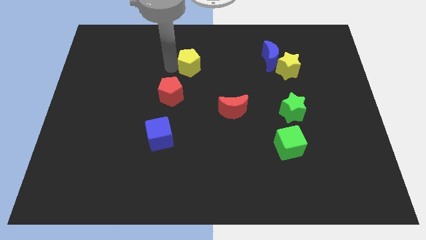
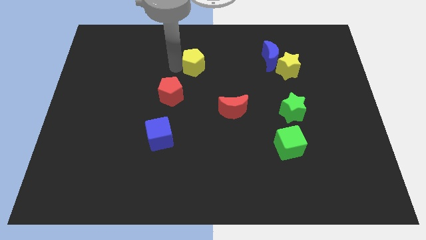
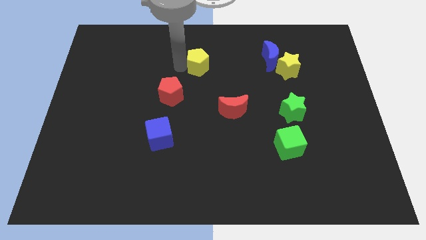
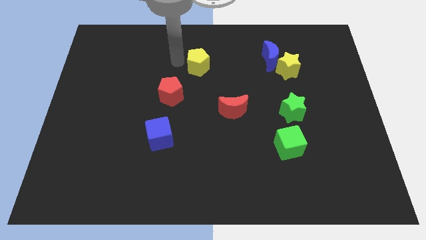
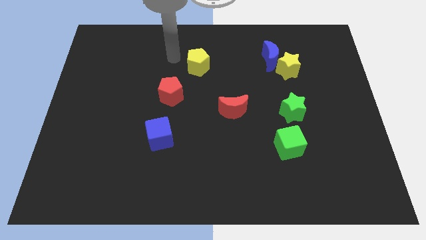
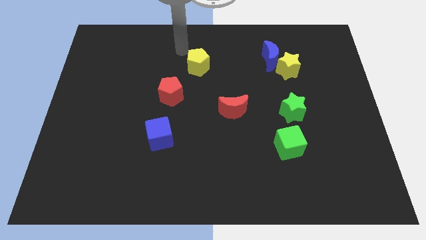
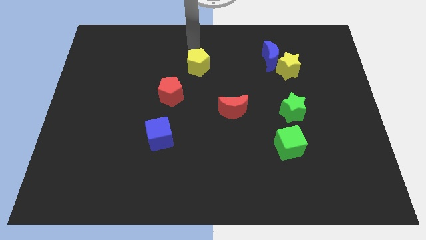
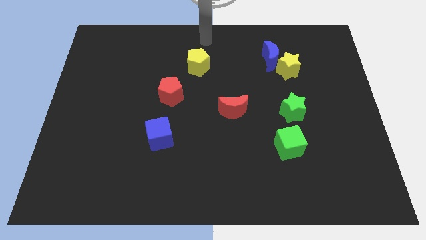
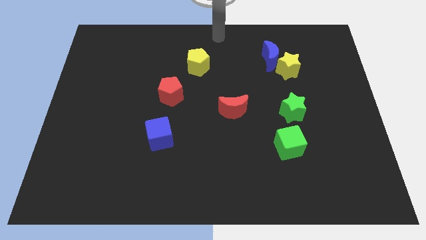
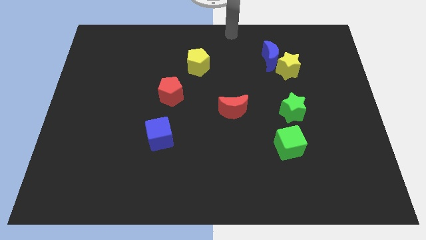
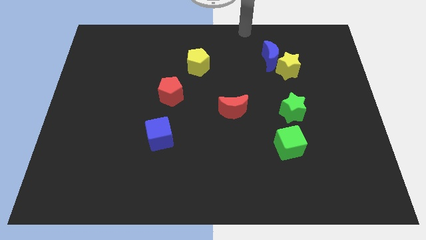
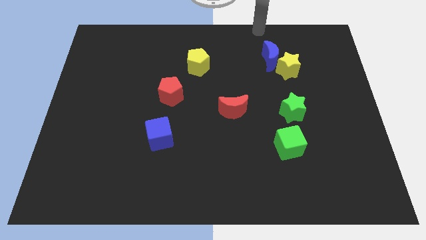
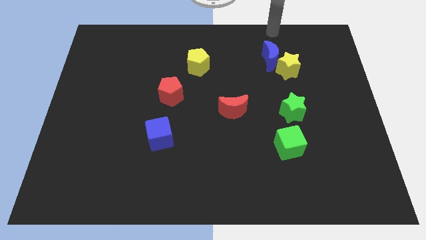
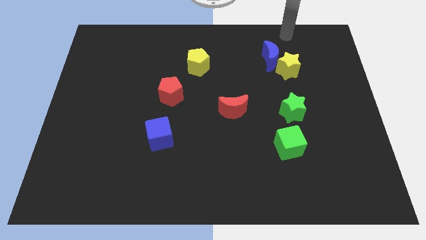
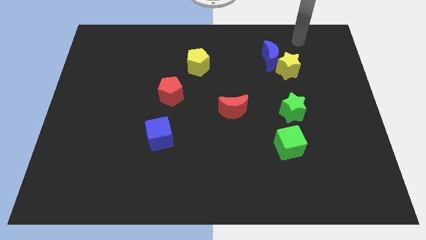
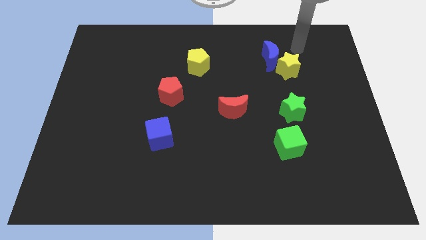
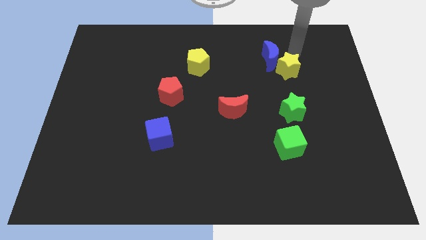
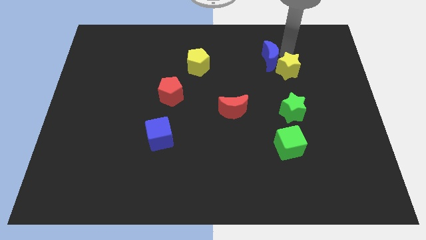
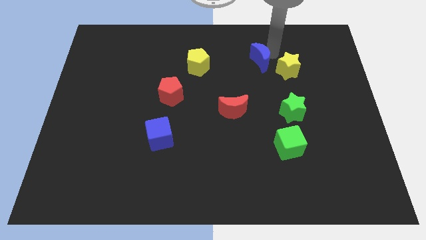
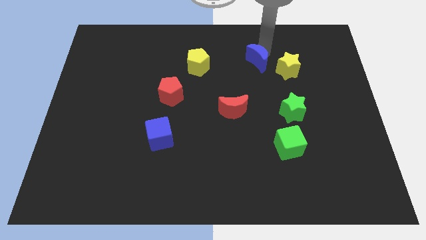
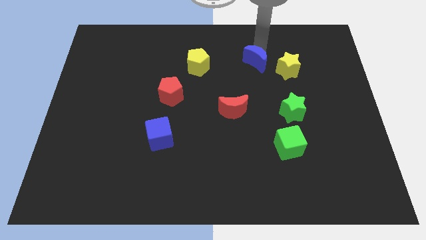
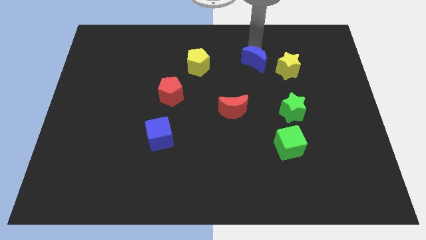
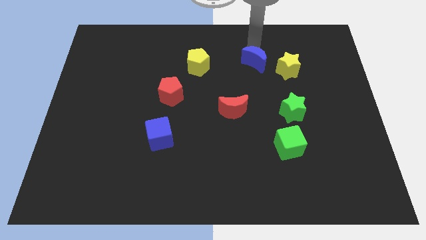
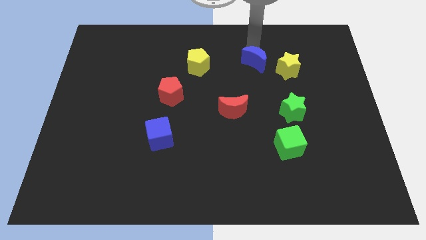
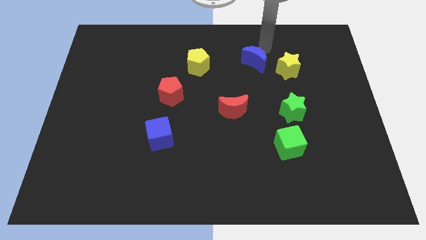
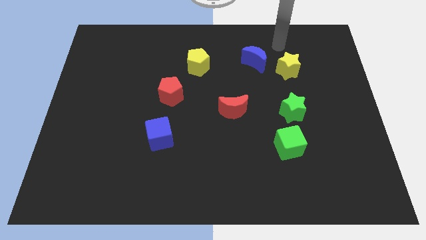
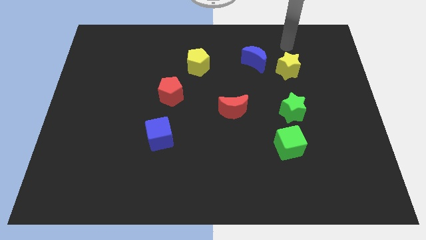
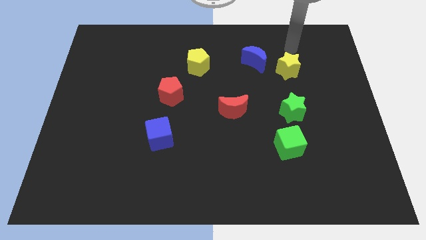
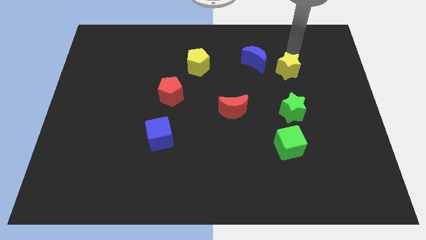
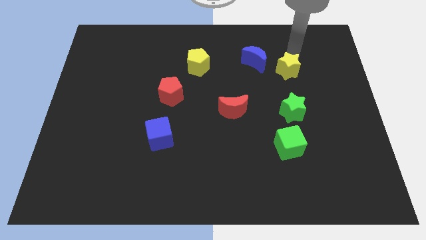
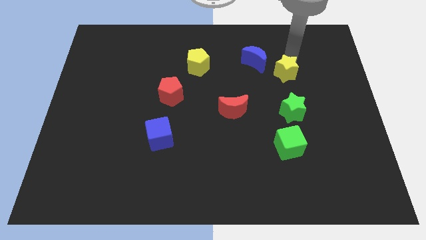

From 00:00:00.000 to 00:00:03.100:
adjust the yellow star and blue moon to the bottom side

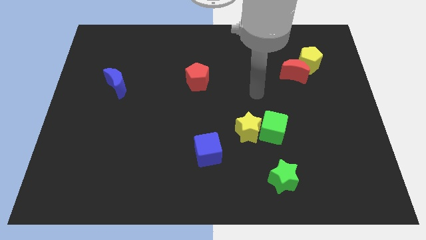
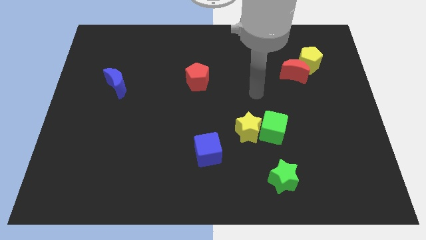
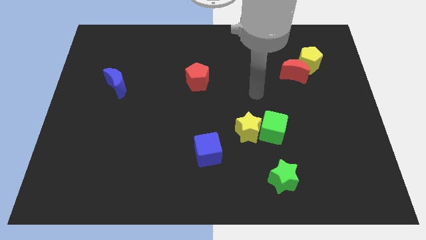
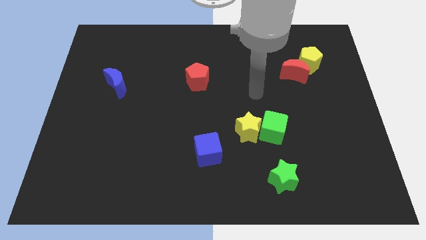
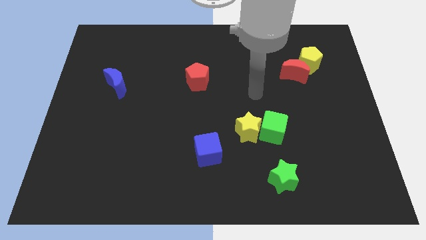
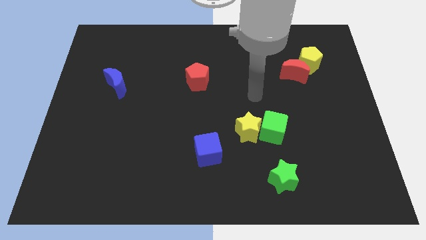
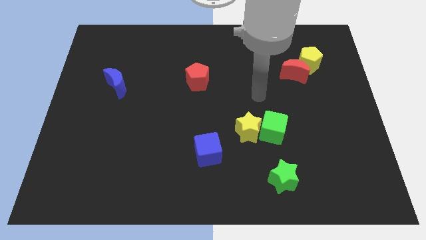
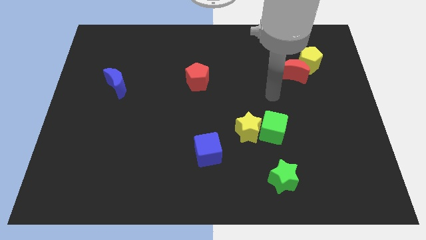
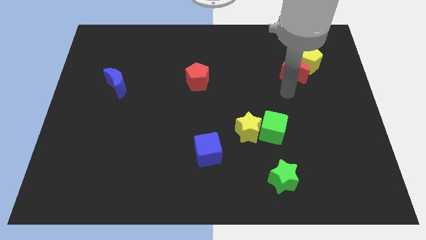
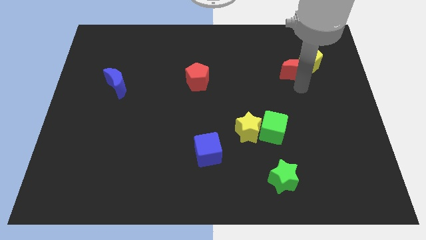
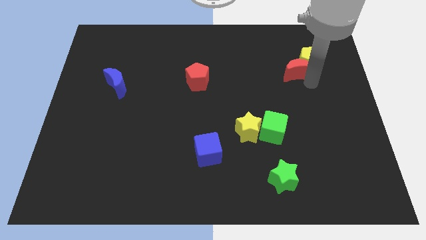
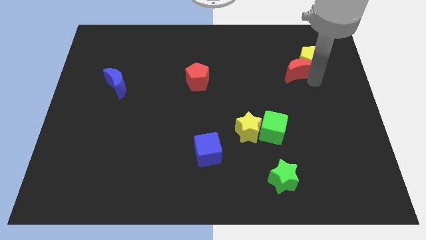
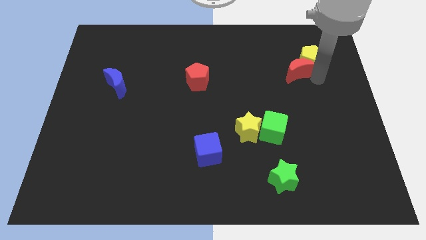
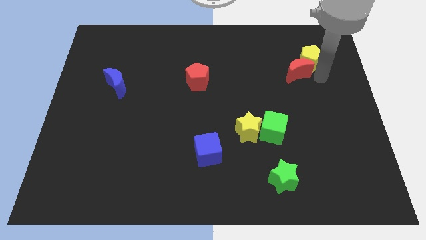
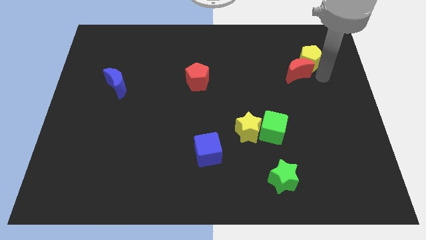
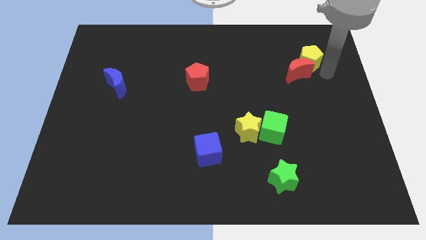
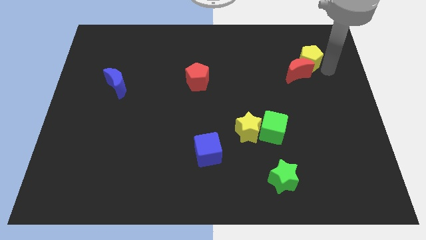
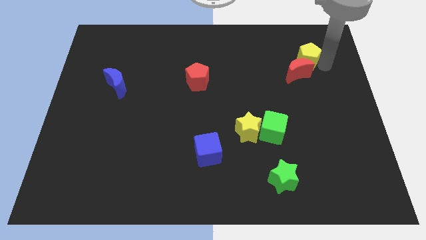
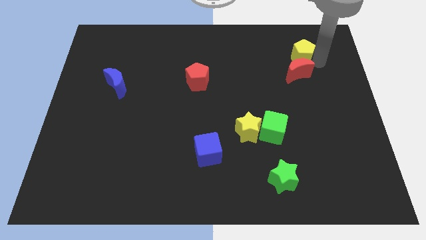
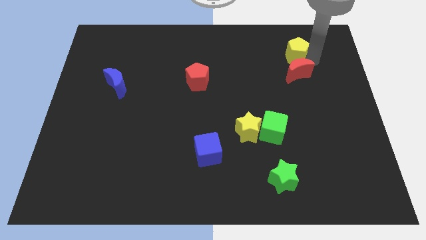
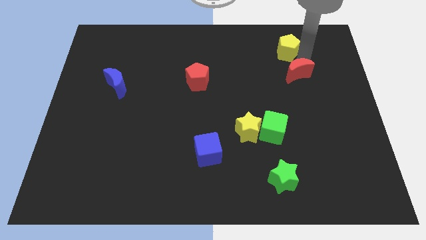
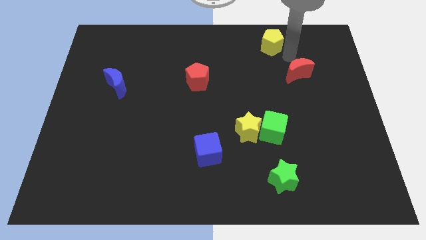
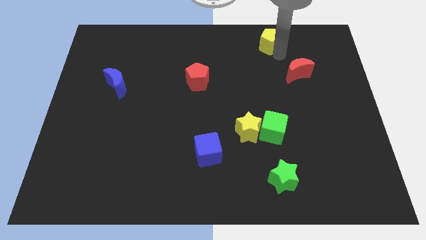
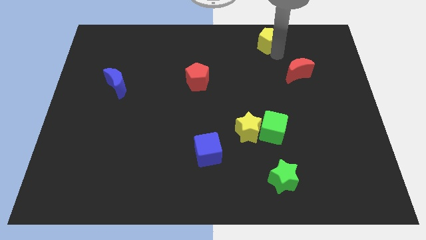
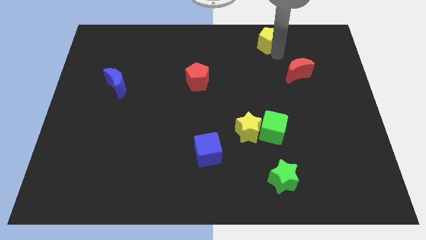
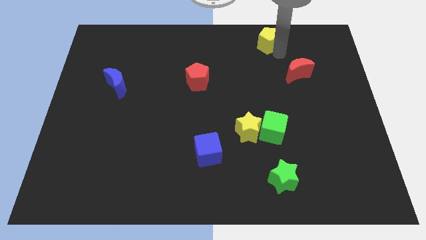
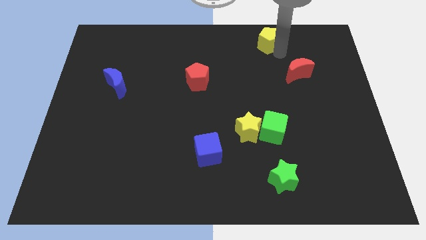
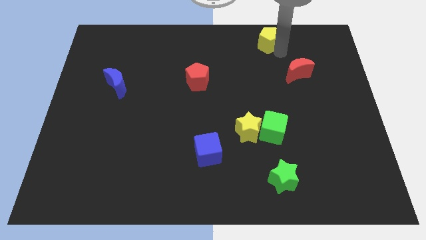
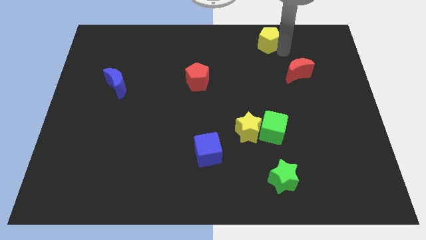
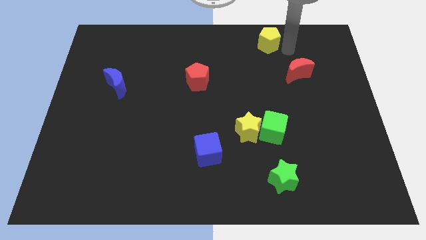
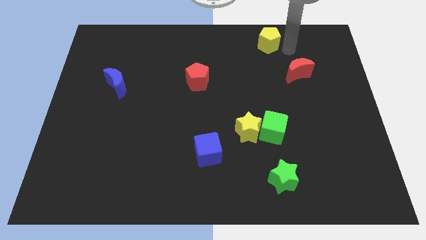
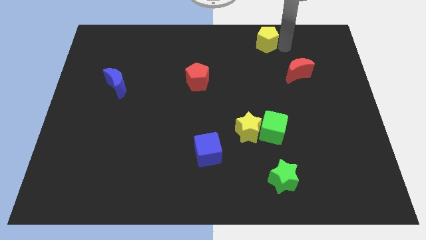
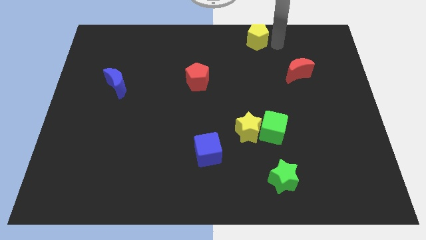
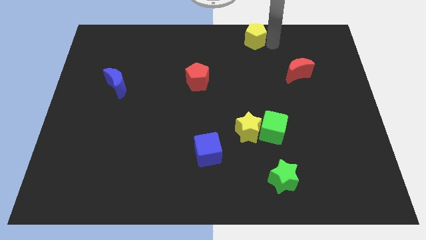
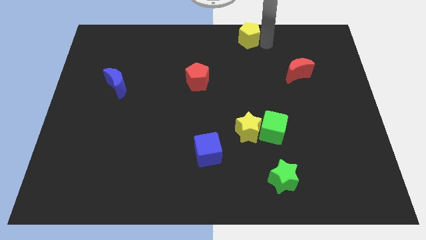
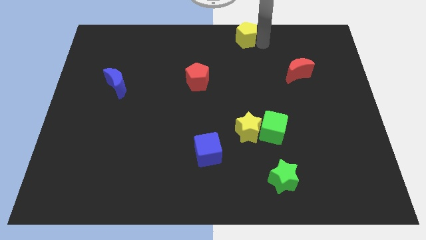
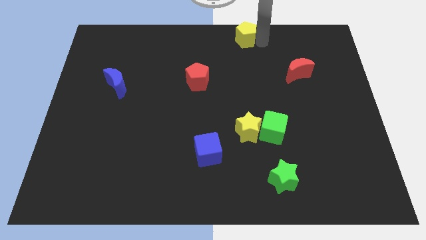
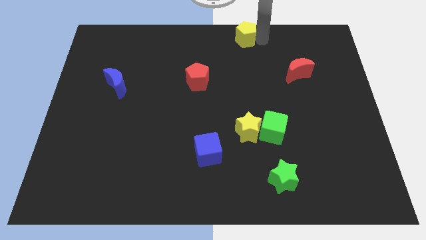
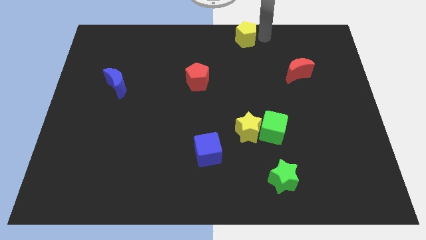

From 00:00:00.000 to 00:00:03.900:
separate the yellow pentagon from the red crescent

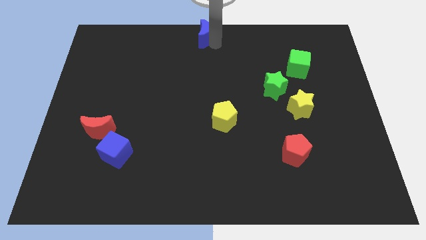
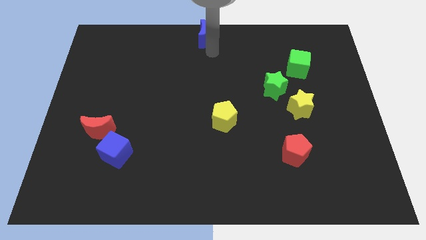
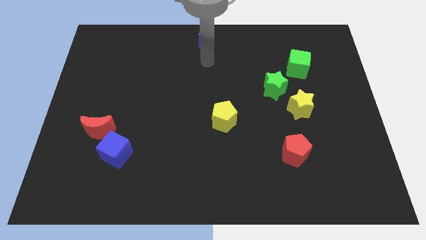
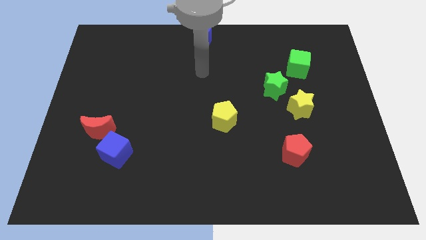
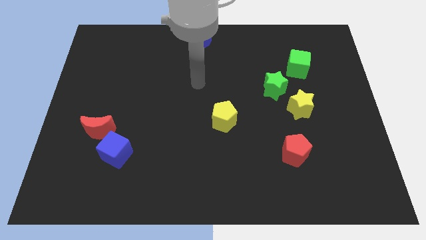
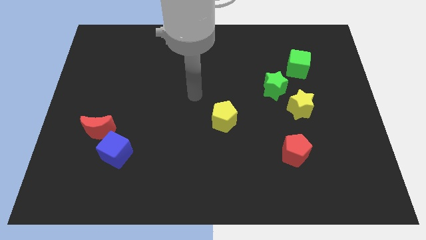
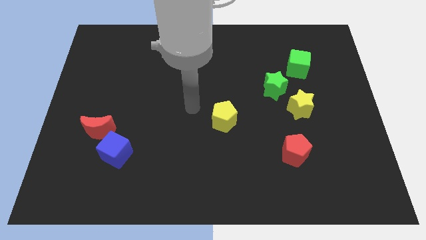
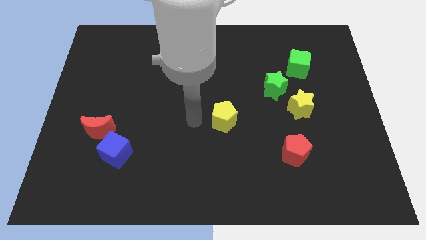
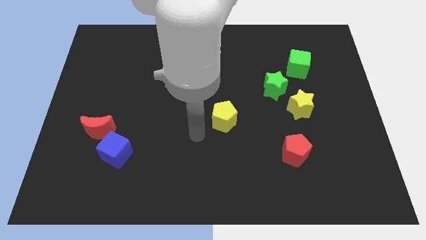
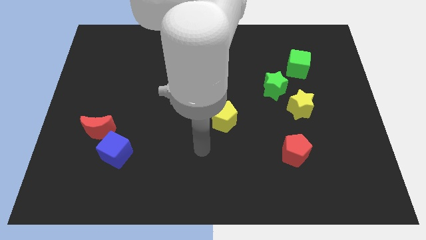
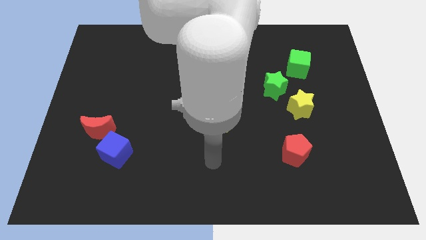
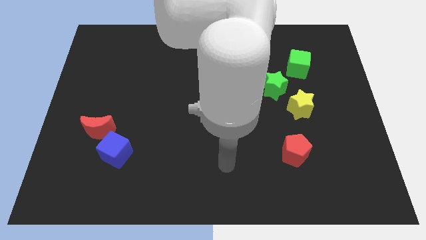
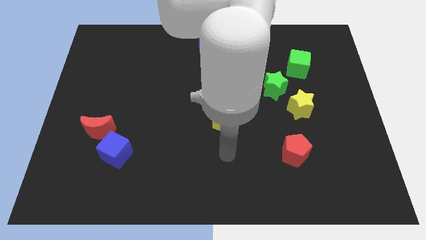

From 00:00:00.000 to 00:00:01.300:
place the arm below the yellow pentagon

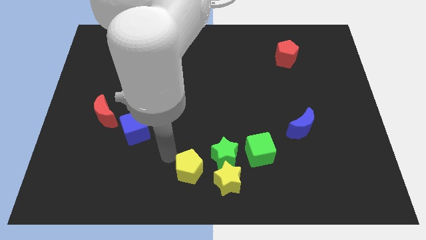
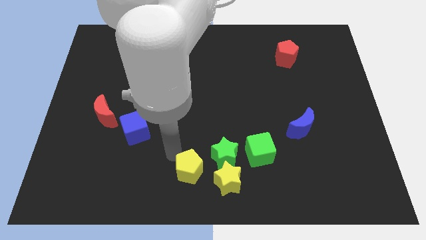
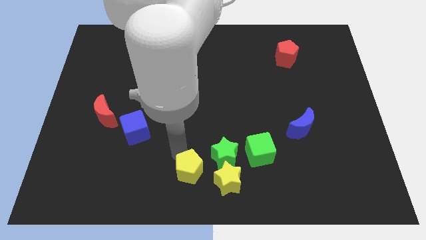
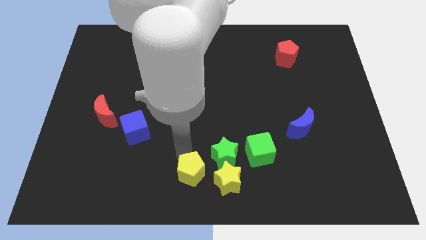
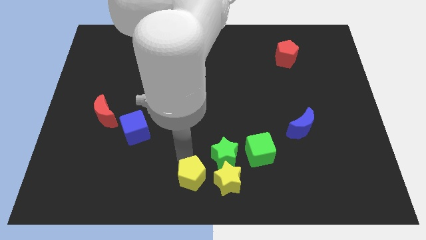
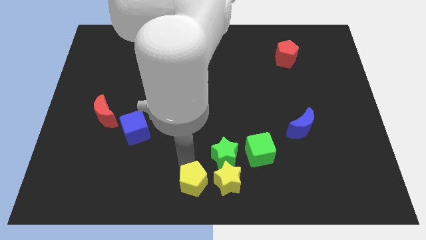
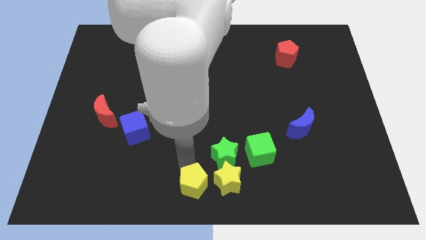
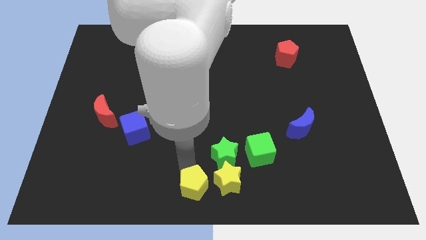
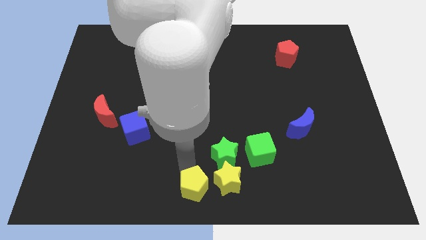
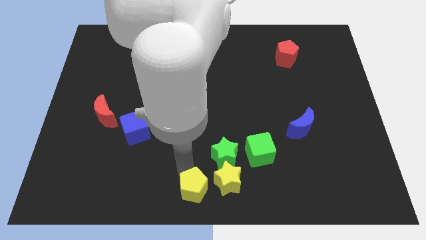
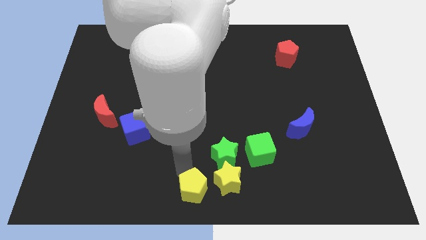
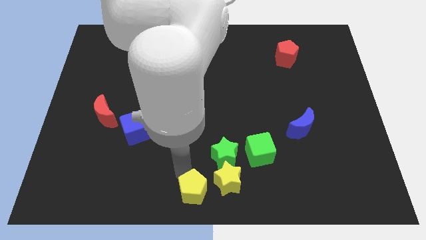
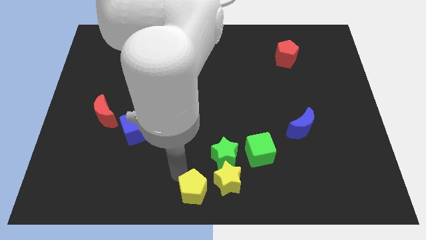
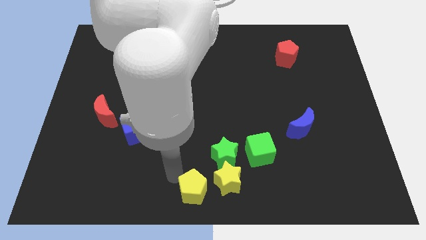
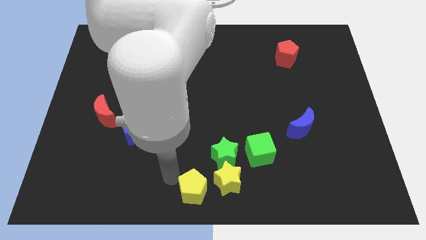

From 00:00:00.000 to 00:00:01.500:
move the yellow pentagon to the left side of the yellow star
